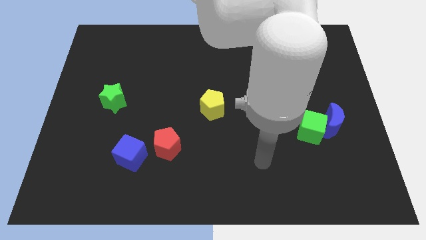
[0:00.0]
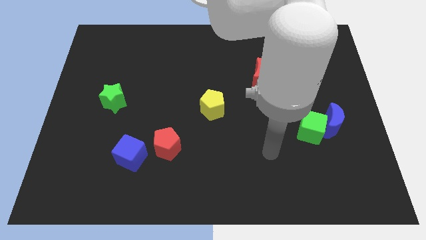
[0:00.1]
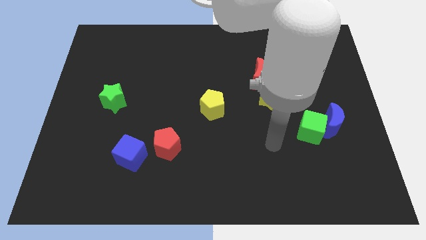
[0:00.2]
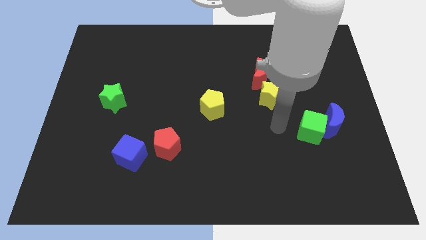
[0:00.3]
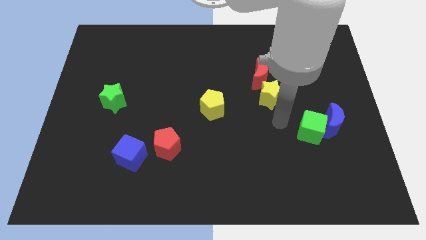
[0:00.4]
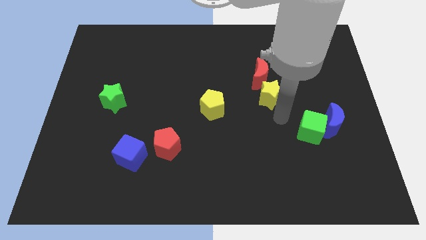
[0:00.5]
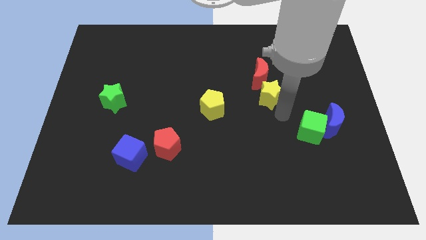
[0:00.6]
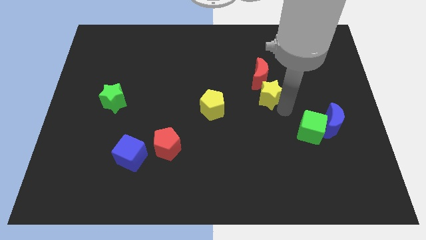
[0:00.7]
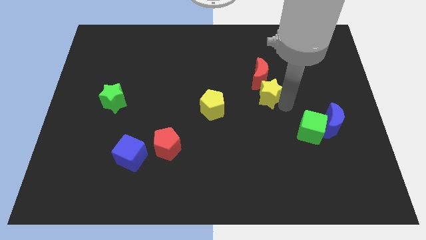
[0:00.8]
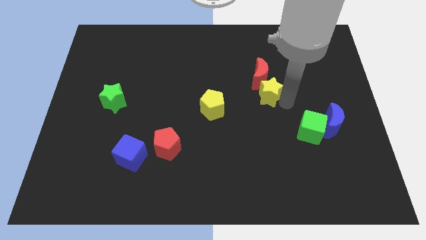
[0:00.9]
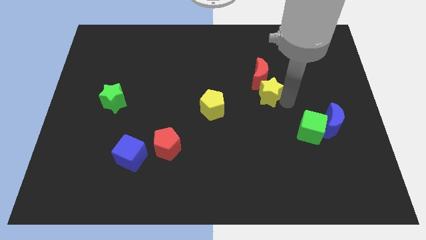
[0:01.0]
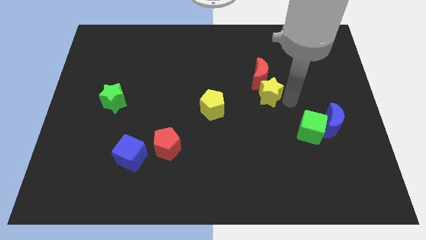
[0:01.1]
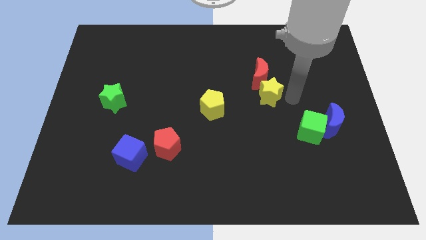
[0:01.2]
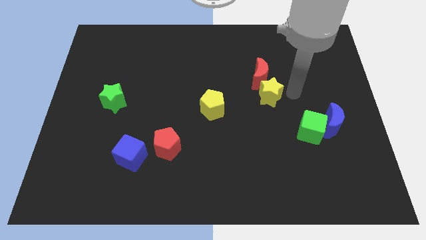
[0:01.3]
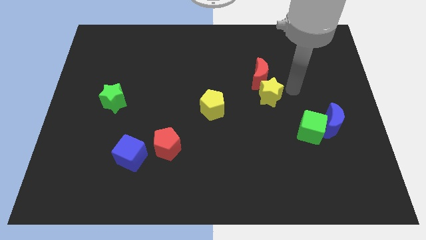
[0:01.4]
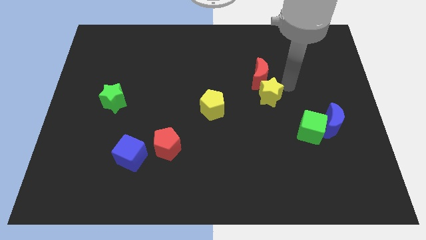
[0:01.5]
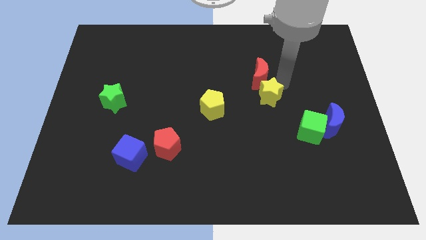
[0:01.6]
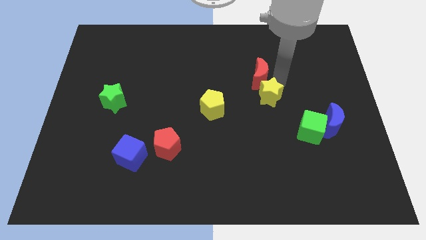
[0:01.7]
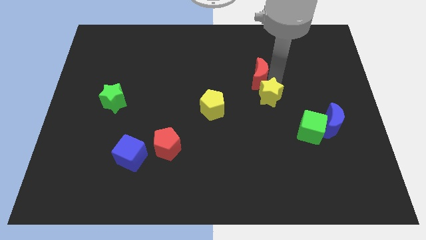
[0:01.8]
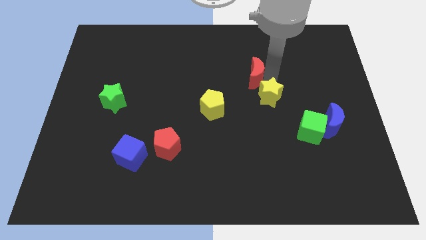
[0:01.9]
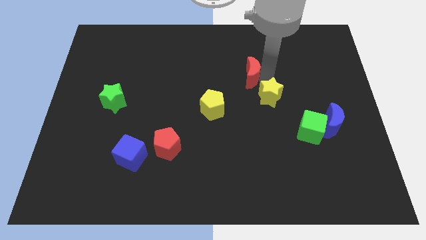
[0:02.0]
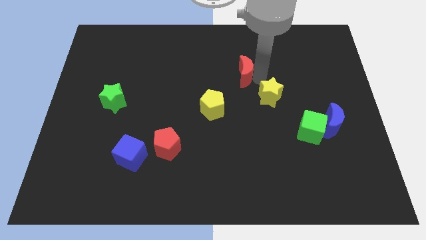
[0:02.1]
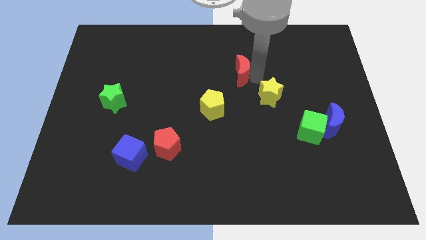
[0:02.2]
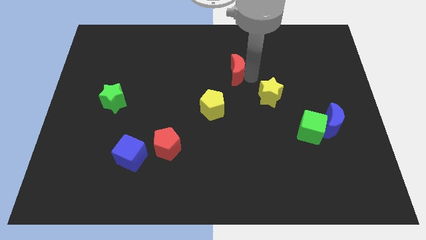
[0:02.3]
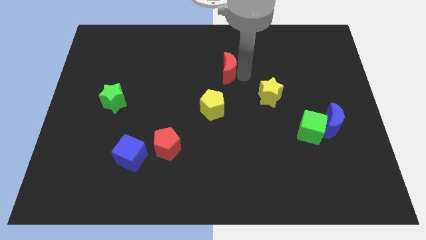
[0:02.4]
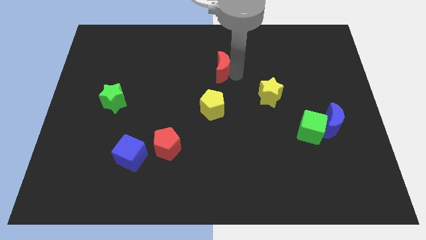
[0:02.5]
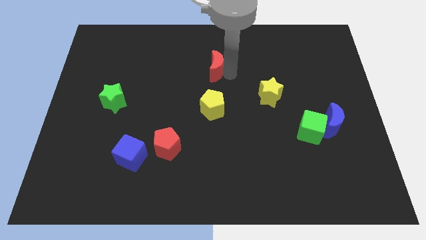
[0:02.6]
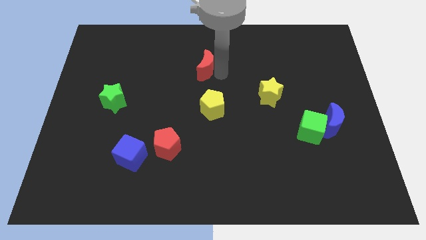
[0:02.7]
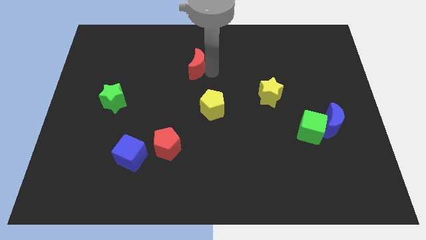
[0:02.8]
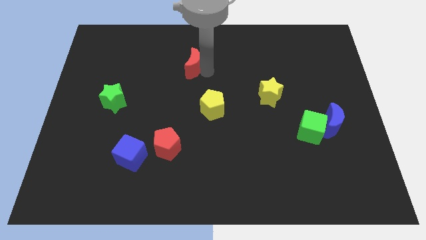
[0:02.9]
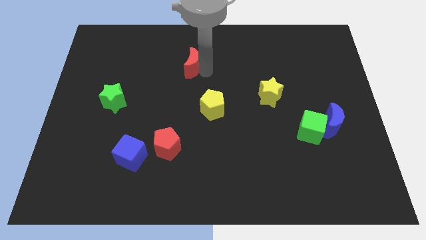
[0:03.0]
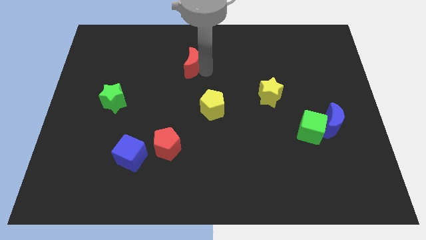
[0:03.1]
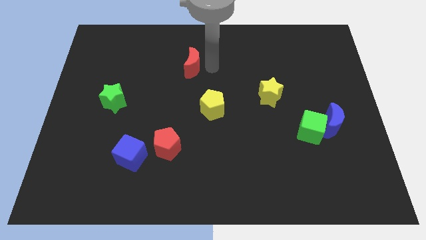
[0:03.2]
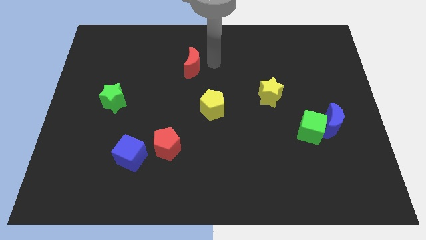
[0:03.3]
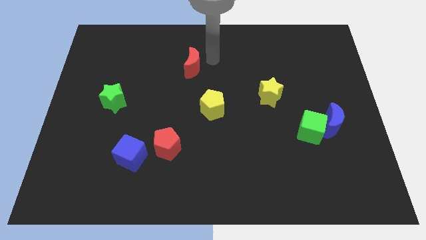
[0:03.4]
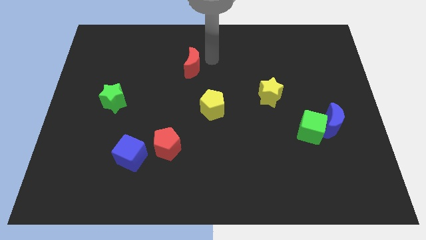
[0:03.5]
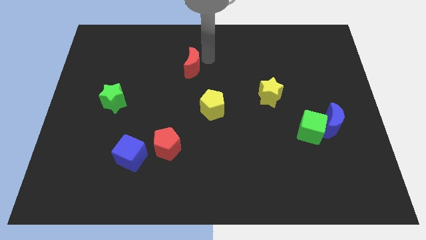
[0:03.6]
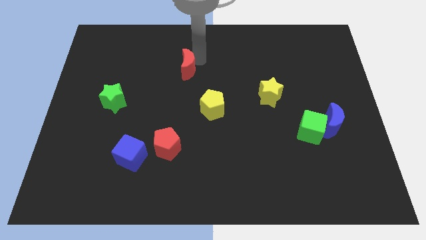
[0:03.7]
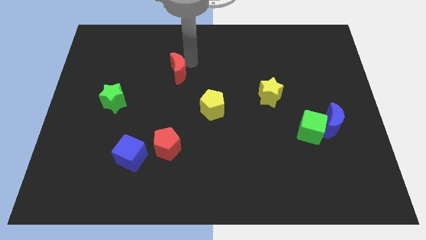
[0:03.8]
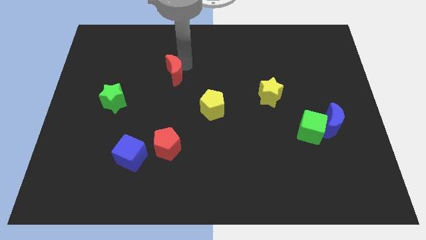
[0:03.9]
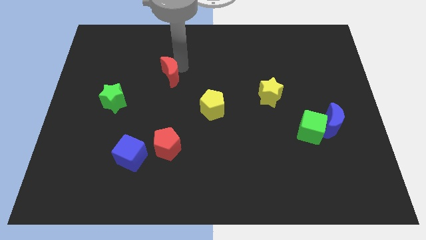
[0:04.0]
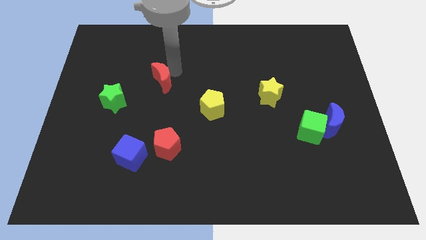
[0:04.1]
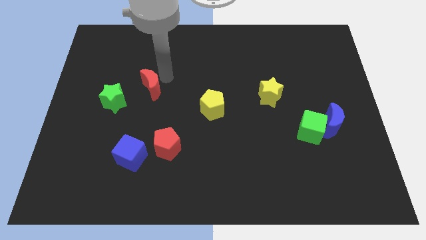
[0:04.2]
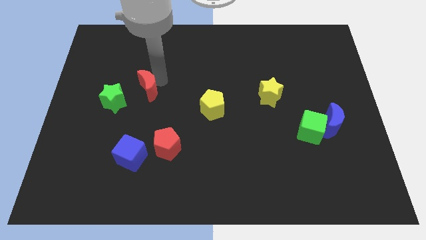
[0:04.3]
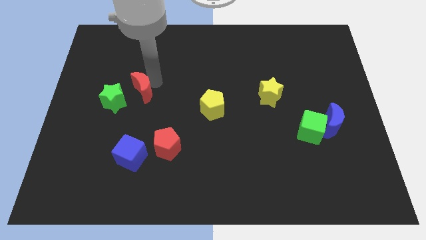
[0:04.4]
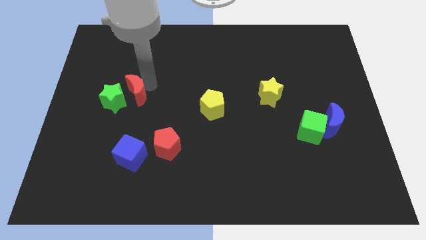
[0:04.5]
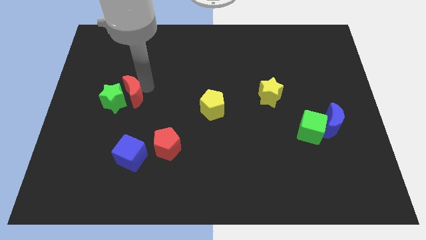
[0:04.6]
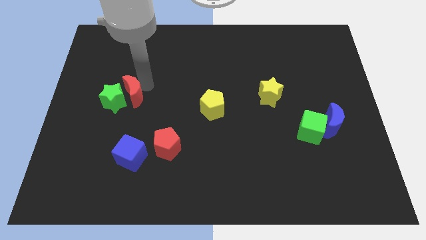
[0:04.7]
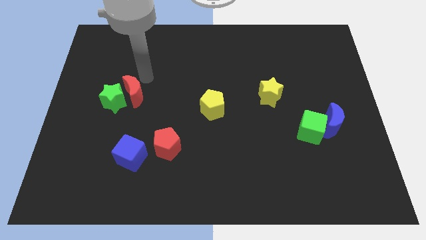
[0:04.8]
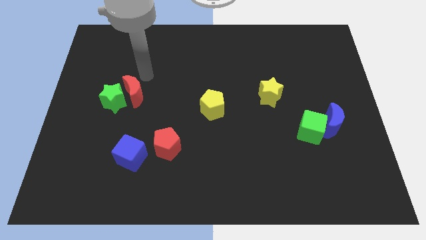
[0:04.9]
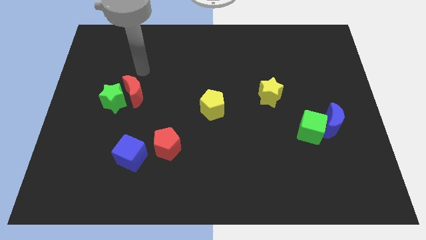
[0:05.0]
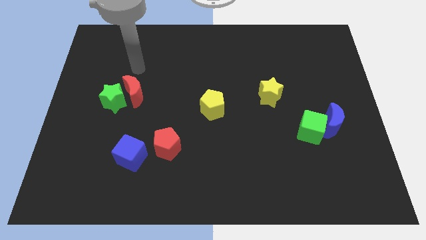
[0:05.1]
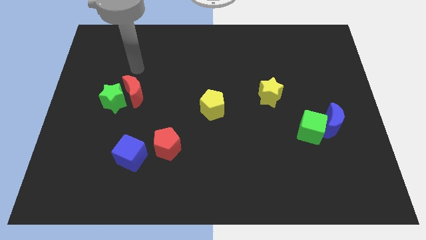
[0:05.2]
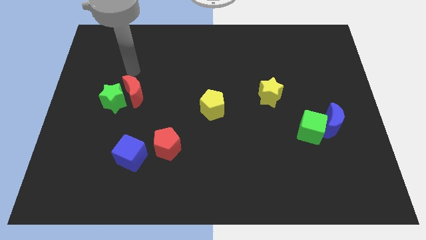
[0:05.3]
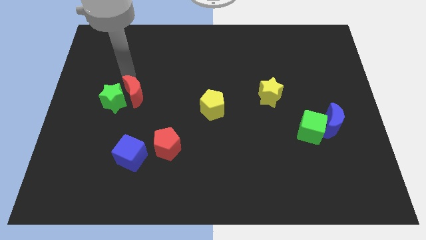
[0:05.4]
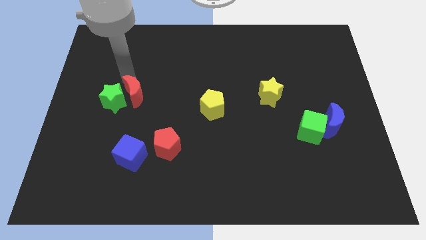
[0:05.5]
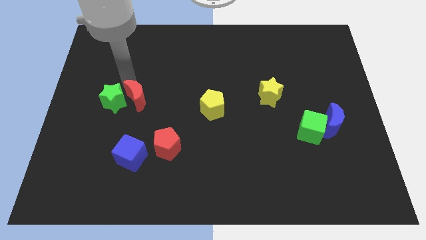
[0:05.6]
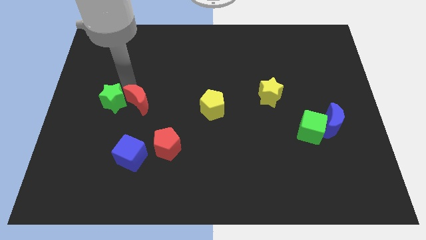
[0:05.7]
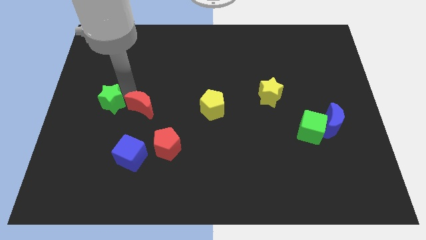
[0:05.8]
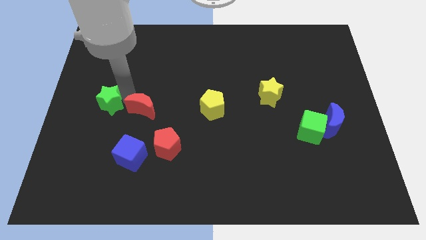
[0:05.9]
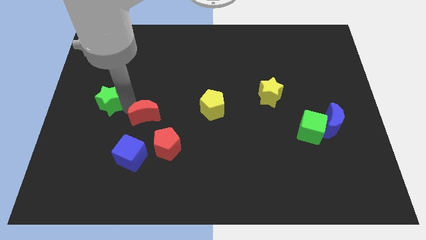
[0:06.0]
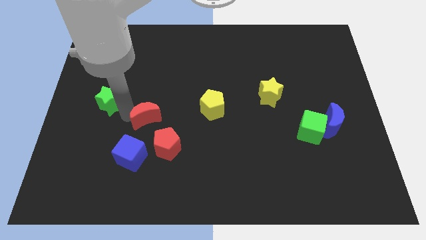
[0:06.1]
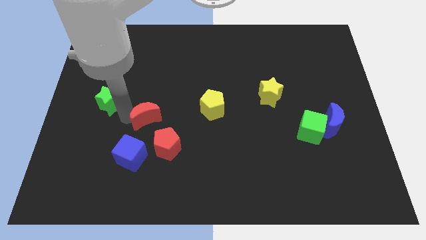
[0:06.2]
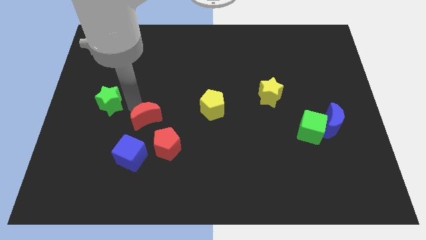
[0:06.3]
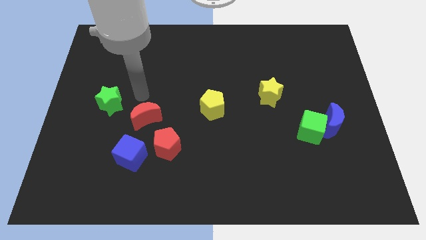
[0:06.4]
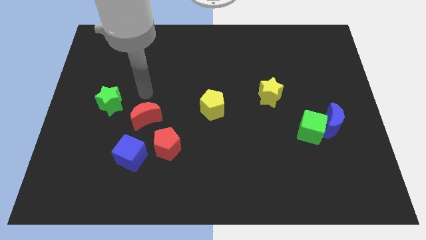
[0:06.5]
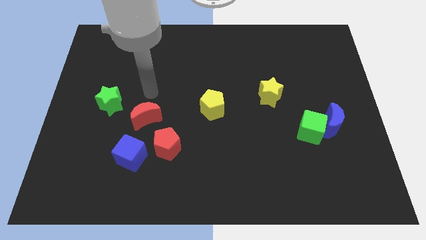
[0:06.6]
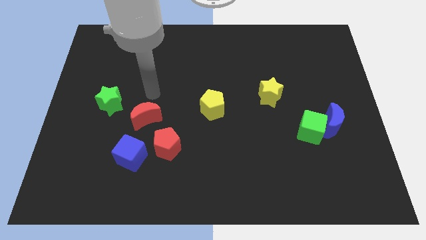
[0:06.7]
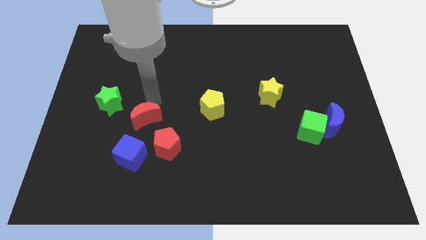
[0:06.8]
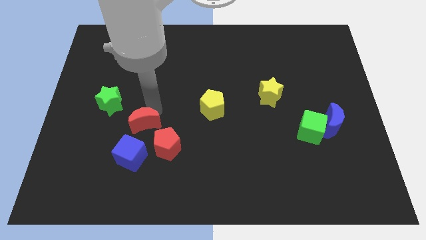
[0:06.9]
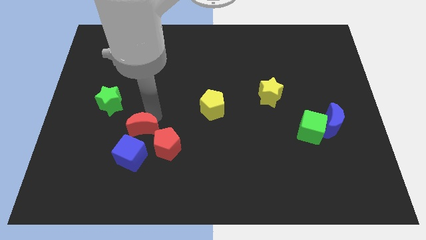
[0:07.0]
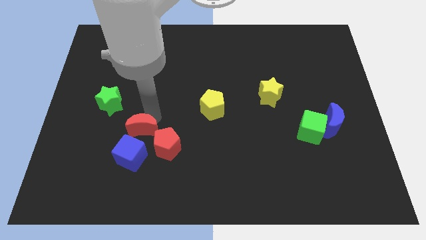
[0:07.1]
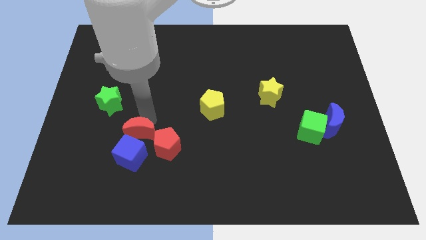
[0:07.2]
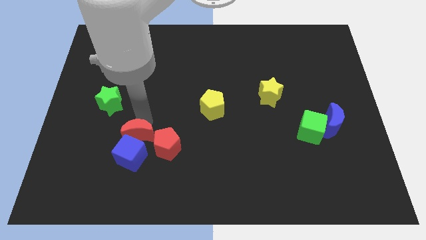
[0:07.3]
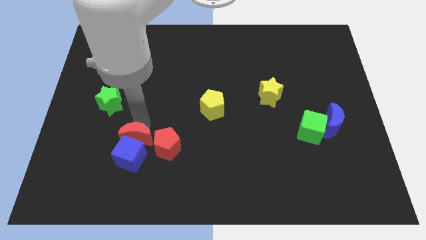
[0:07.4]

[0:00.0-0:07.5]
put the red moon next to the blue cube

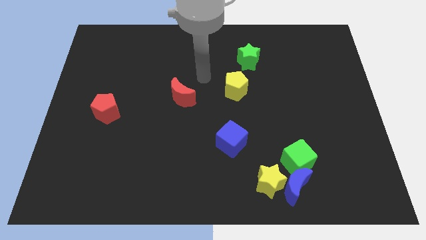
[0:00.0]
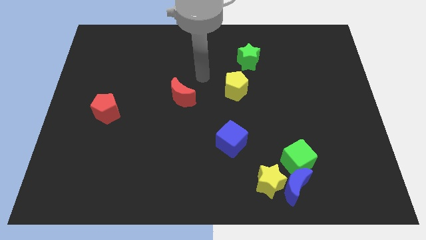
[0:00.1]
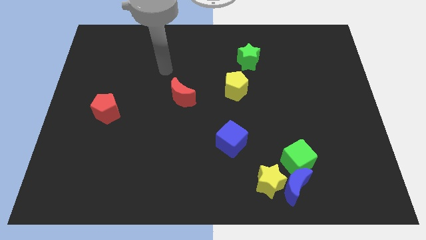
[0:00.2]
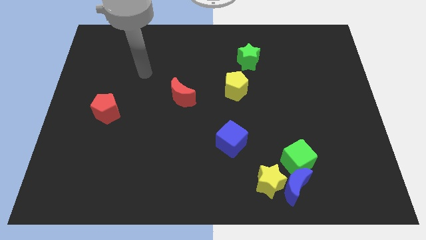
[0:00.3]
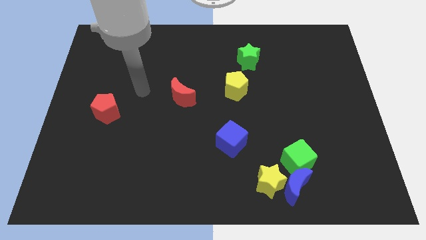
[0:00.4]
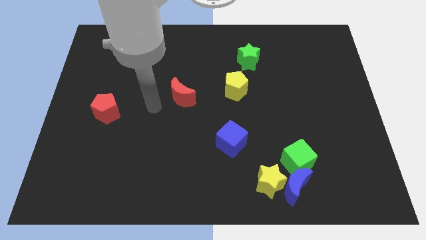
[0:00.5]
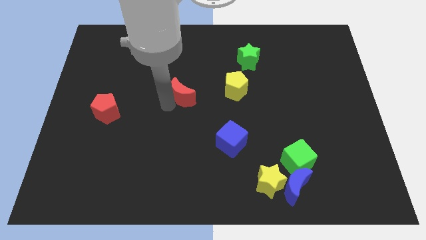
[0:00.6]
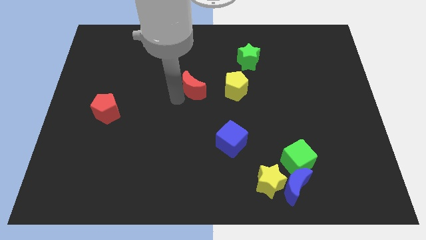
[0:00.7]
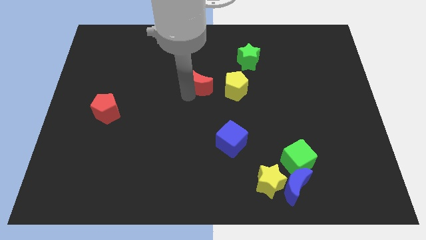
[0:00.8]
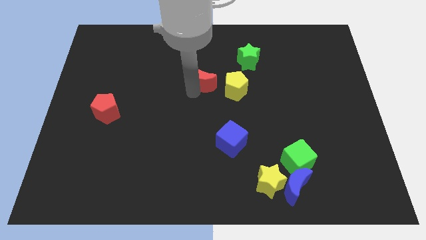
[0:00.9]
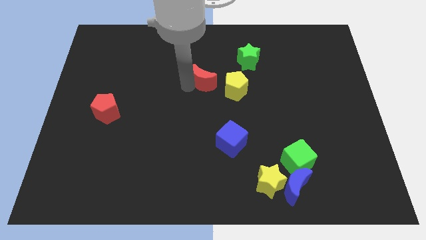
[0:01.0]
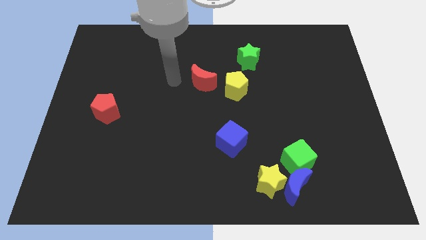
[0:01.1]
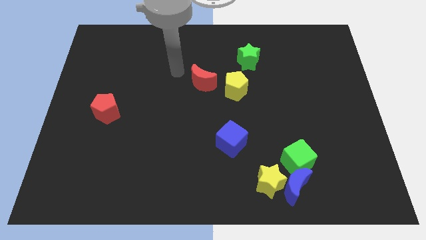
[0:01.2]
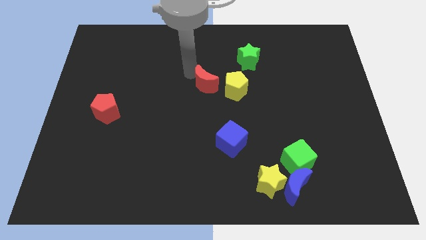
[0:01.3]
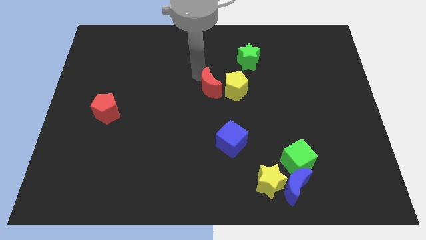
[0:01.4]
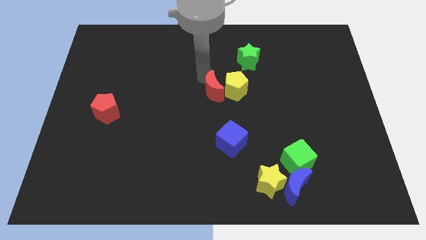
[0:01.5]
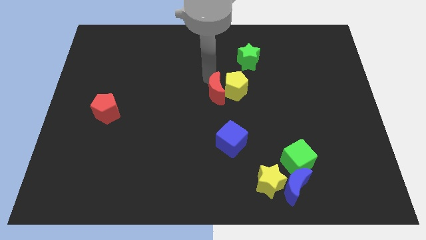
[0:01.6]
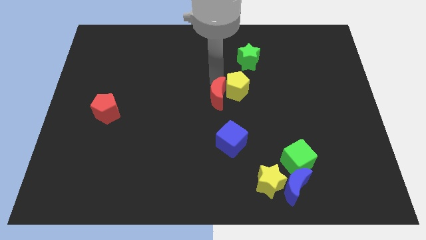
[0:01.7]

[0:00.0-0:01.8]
put the red moon close to the yellow pentagon
